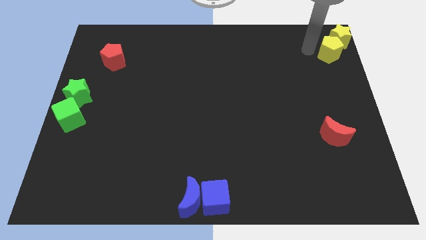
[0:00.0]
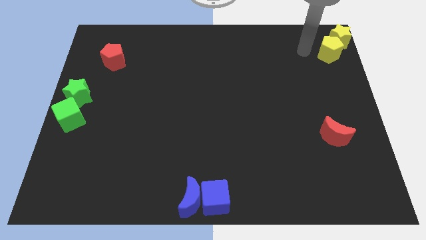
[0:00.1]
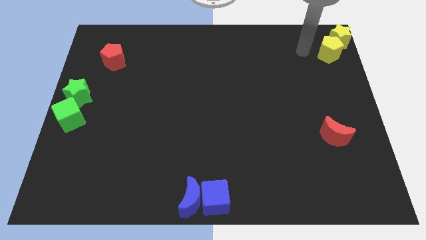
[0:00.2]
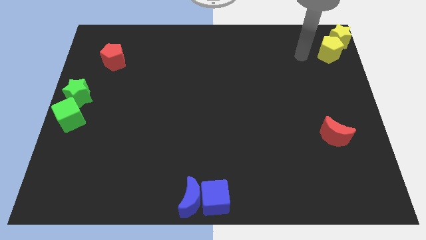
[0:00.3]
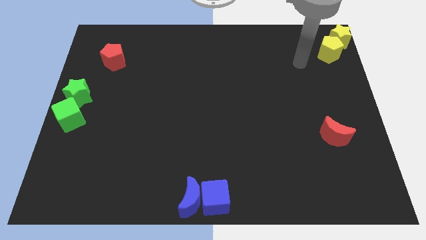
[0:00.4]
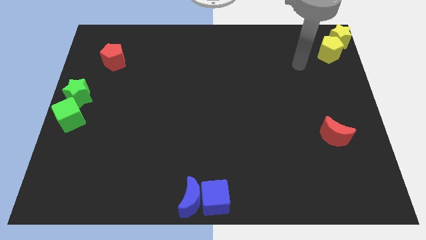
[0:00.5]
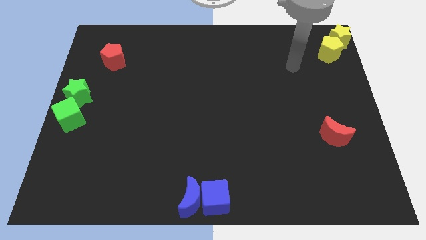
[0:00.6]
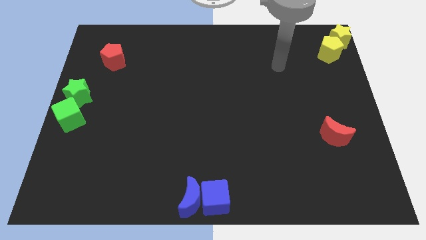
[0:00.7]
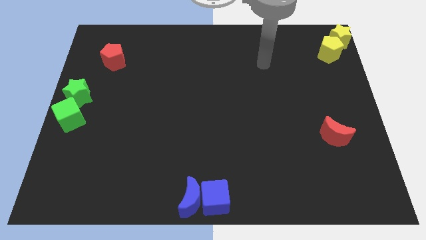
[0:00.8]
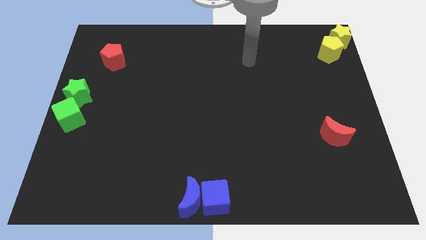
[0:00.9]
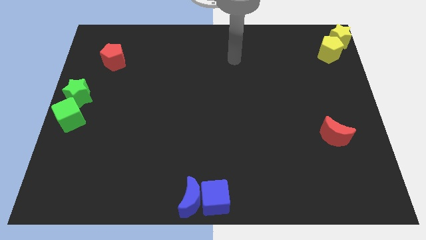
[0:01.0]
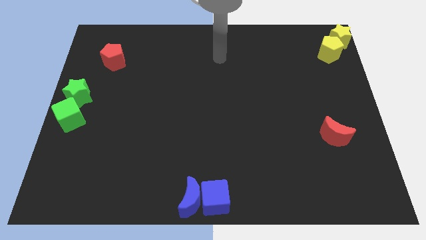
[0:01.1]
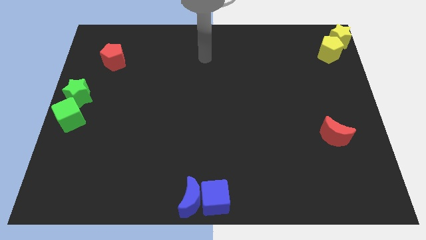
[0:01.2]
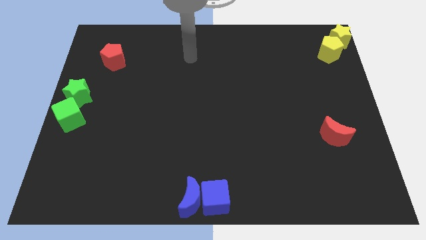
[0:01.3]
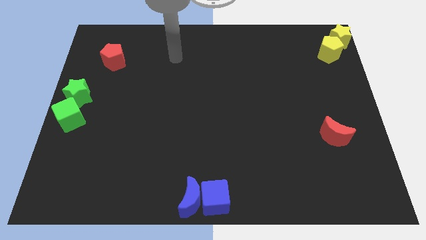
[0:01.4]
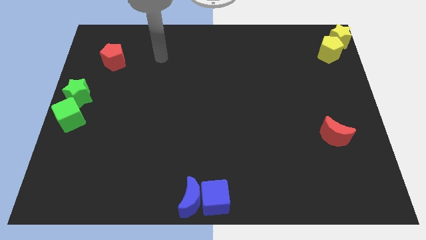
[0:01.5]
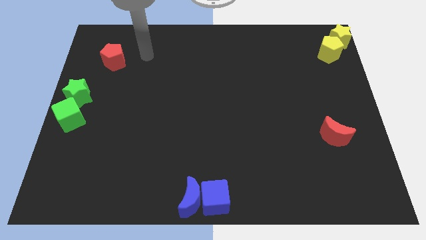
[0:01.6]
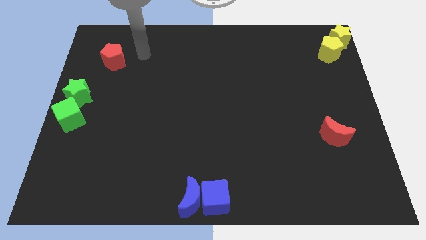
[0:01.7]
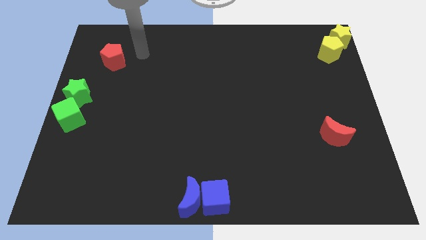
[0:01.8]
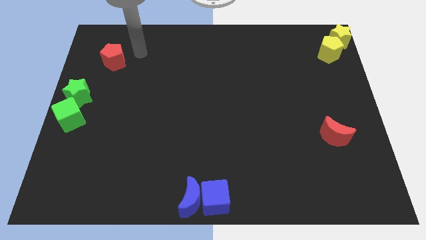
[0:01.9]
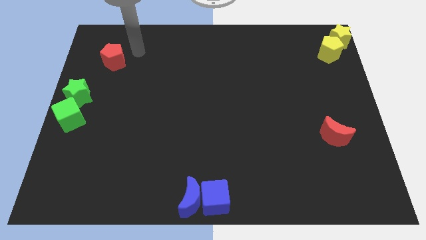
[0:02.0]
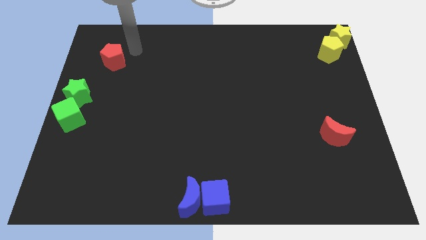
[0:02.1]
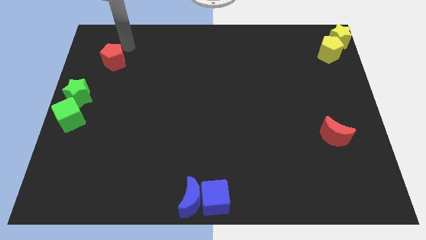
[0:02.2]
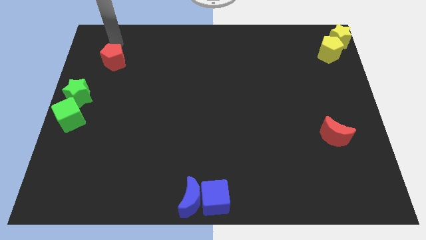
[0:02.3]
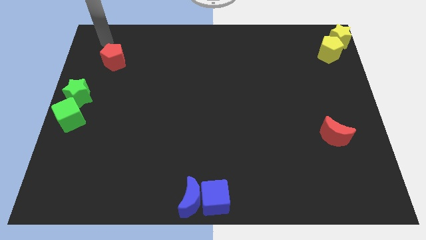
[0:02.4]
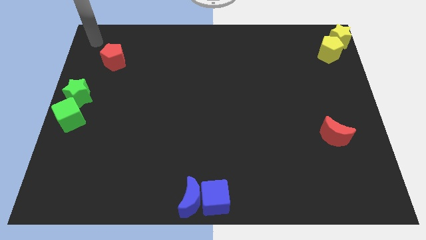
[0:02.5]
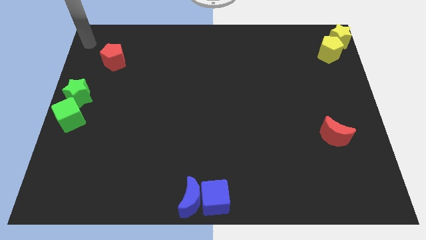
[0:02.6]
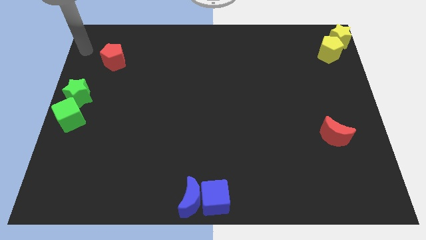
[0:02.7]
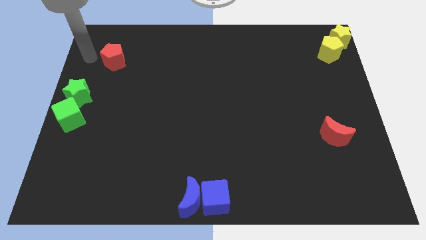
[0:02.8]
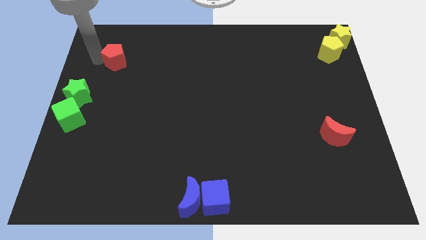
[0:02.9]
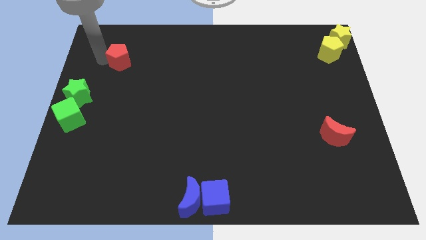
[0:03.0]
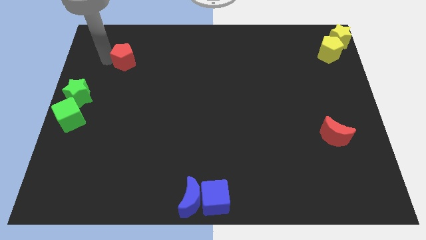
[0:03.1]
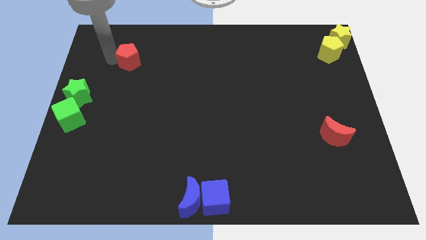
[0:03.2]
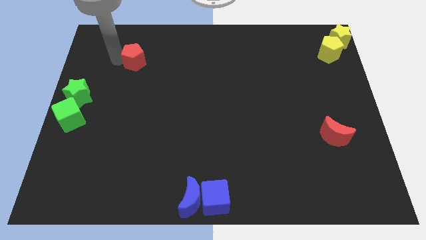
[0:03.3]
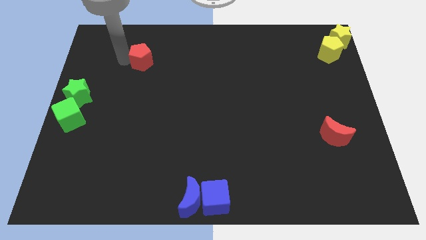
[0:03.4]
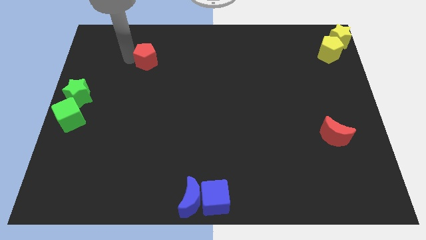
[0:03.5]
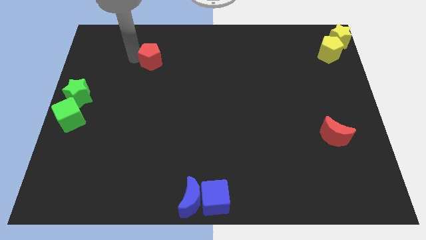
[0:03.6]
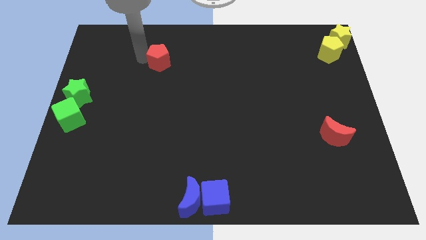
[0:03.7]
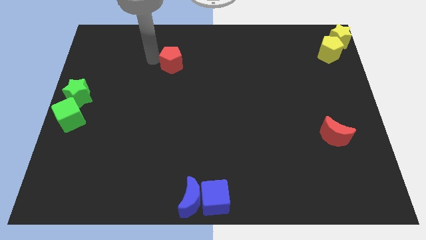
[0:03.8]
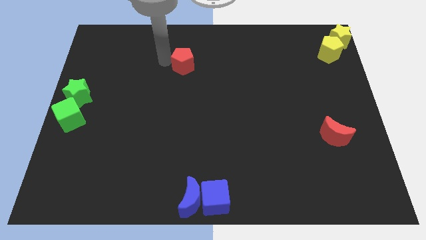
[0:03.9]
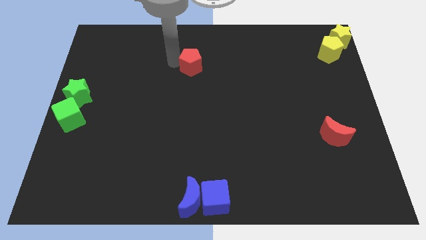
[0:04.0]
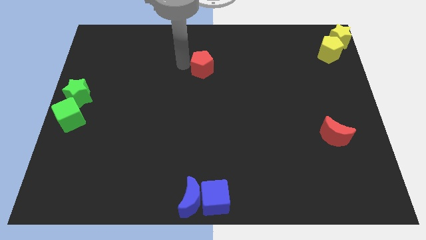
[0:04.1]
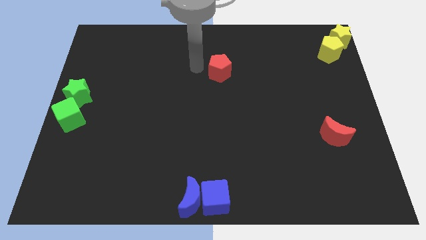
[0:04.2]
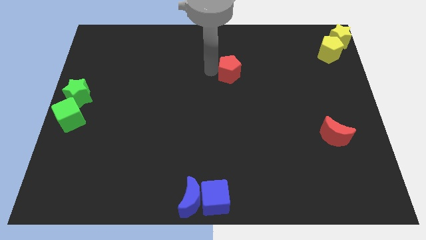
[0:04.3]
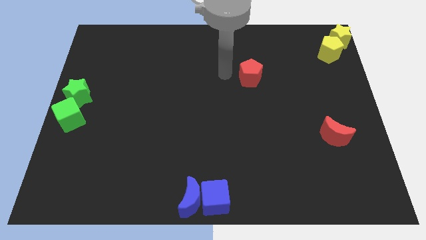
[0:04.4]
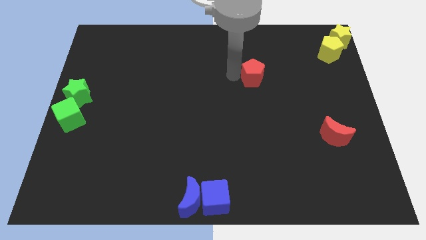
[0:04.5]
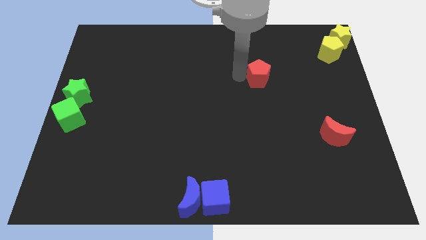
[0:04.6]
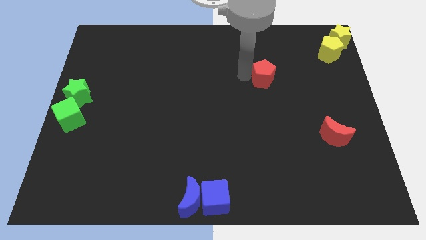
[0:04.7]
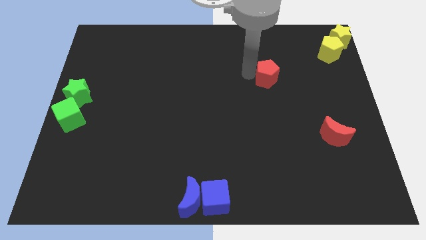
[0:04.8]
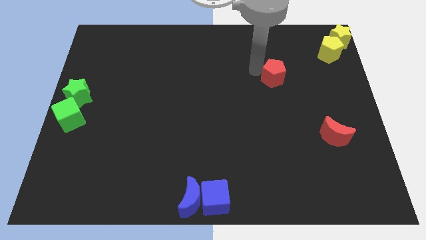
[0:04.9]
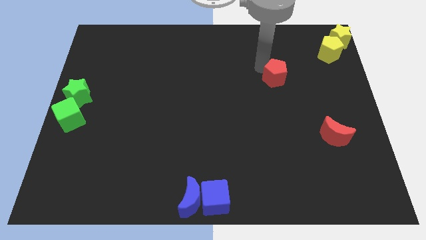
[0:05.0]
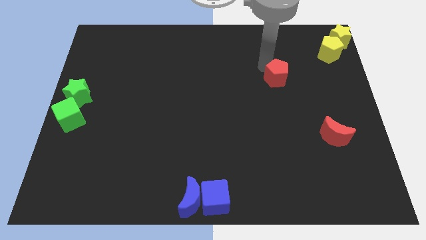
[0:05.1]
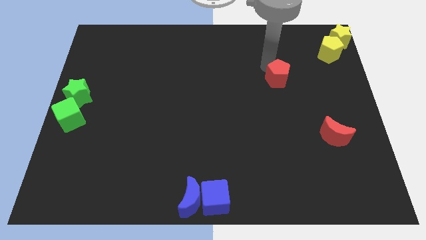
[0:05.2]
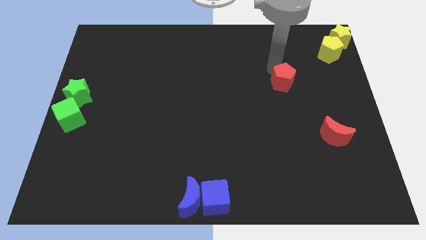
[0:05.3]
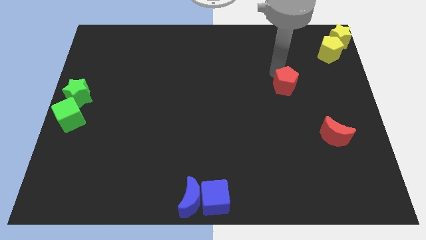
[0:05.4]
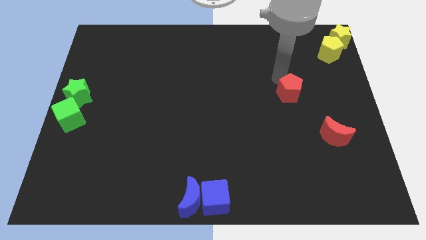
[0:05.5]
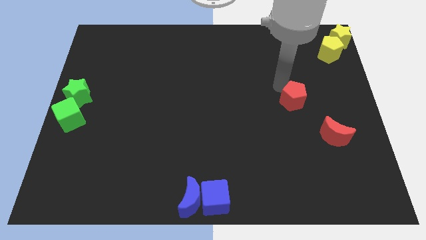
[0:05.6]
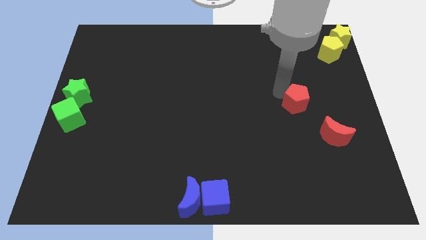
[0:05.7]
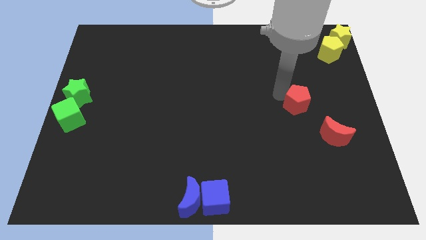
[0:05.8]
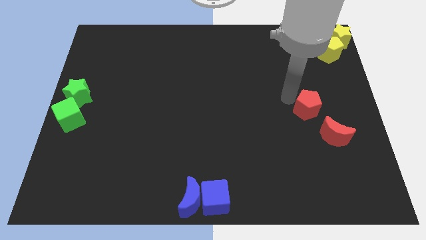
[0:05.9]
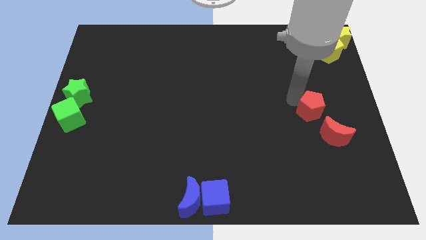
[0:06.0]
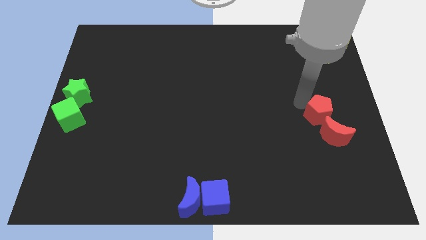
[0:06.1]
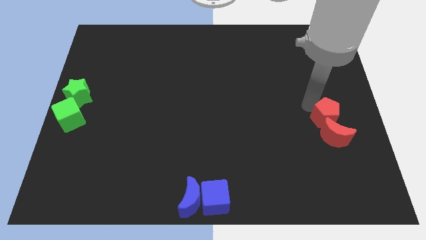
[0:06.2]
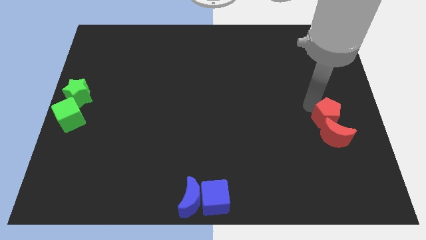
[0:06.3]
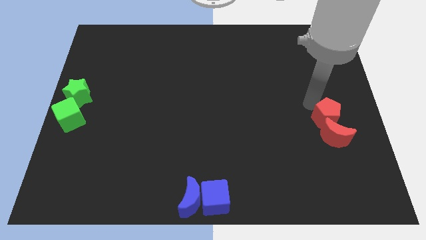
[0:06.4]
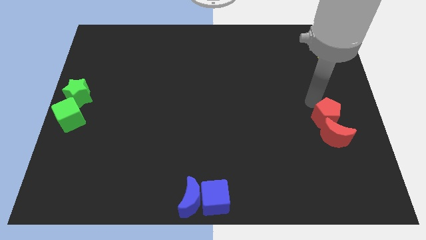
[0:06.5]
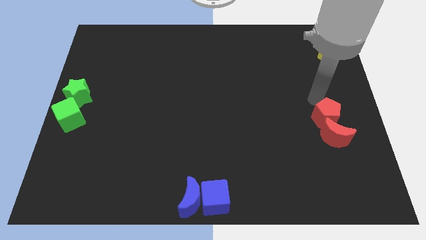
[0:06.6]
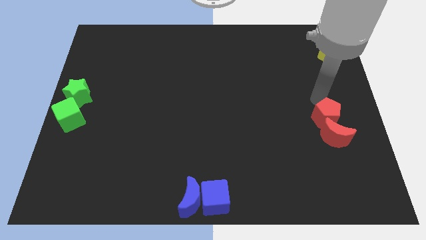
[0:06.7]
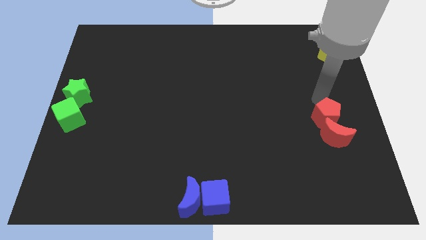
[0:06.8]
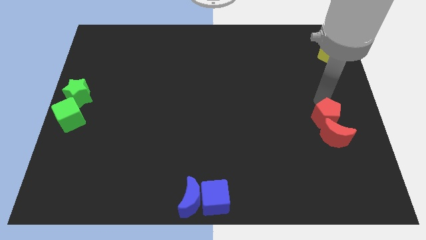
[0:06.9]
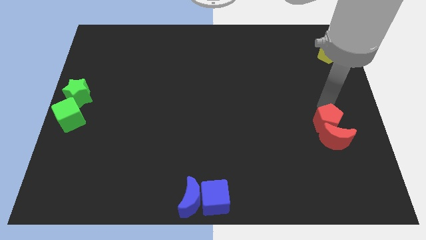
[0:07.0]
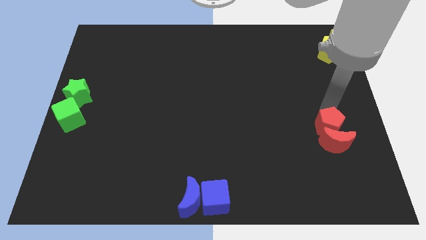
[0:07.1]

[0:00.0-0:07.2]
move red pentagon into red crescent

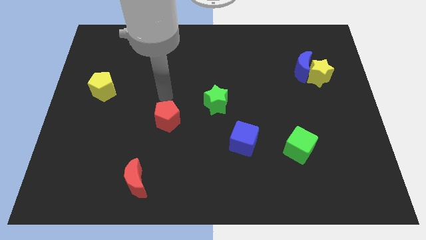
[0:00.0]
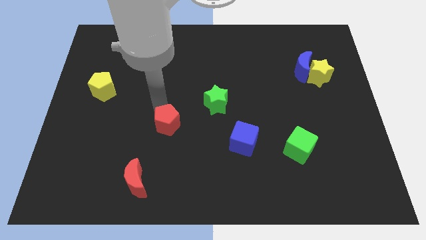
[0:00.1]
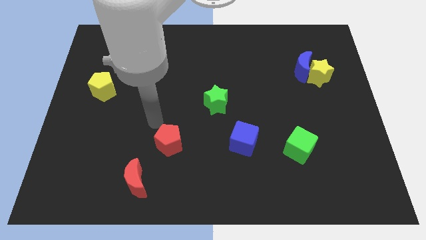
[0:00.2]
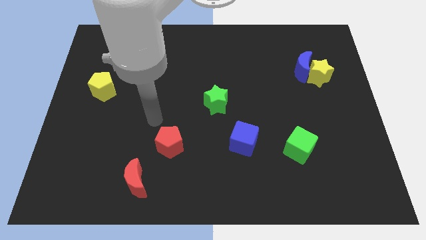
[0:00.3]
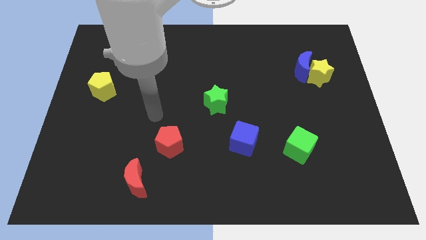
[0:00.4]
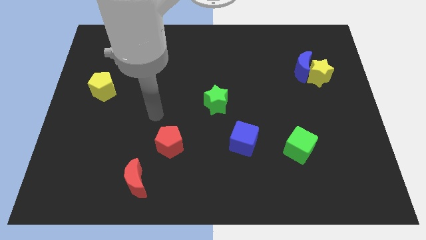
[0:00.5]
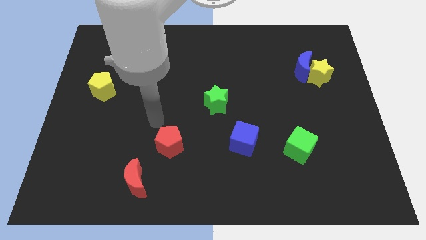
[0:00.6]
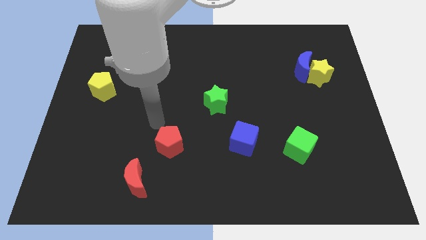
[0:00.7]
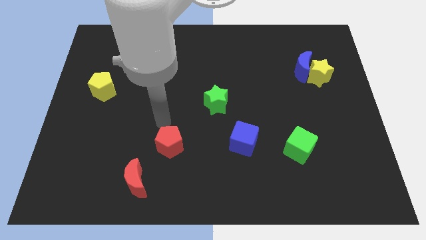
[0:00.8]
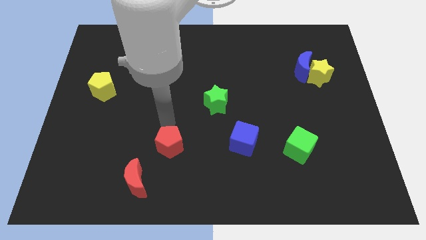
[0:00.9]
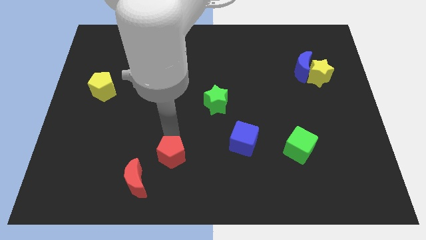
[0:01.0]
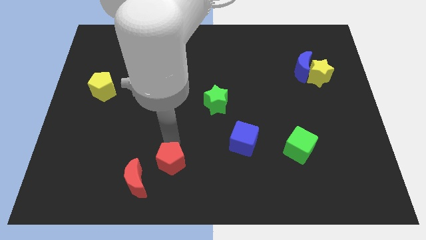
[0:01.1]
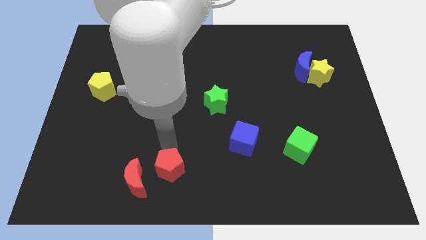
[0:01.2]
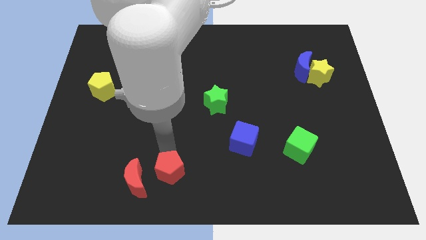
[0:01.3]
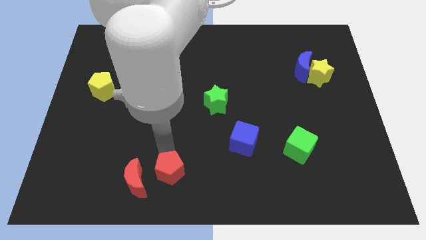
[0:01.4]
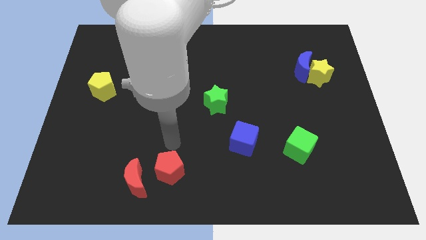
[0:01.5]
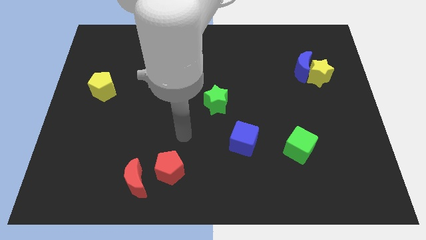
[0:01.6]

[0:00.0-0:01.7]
move the red pentagon to the right of the red crescent
